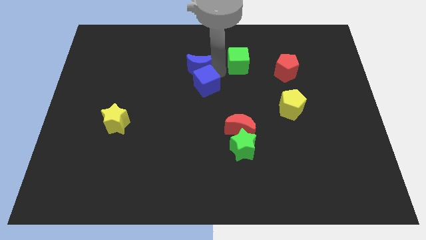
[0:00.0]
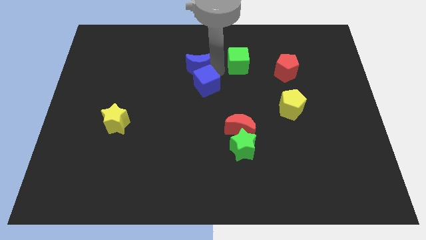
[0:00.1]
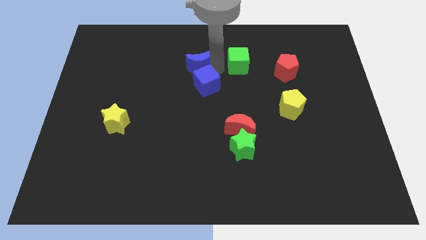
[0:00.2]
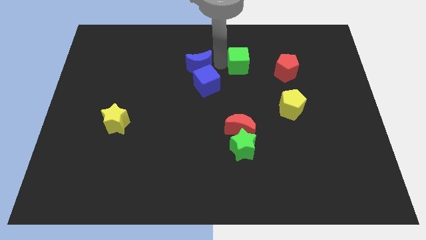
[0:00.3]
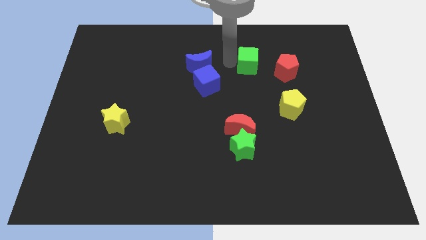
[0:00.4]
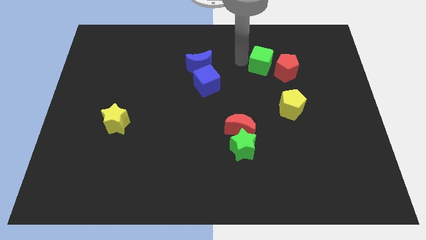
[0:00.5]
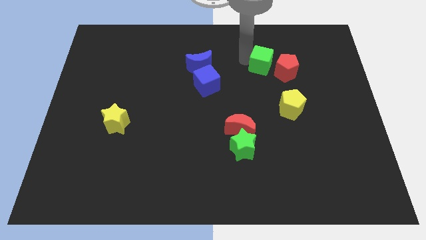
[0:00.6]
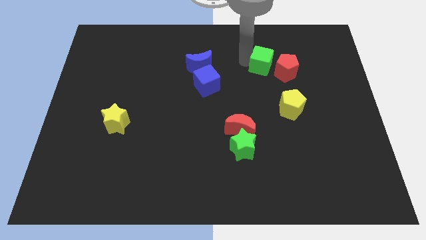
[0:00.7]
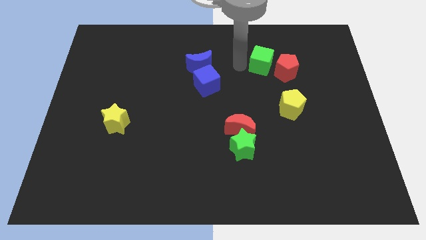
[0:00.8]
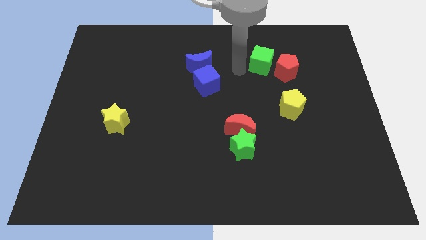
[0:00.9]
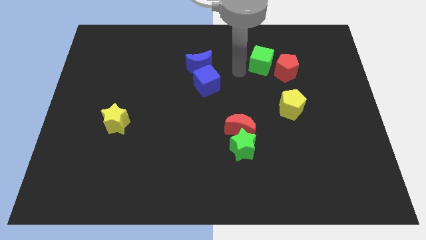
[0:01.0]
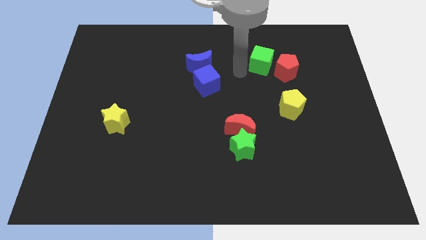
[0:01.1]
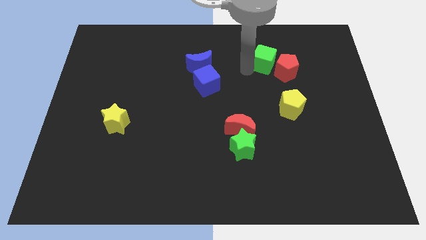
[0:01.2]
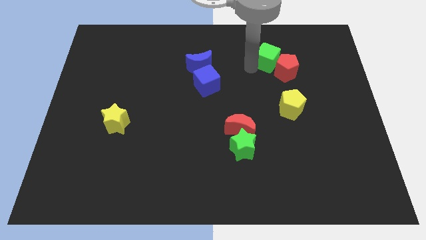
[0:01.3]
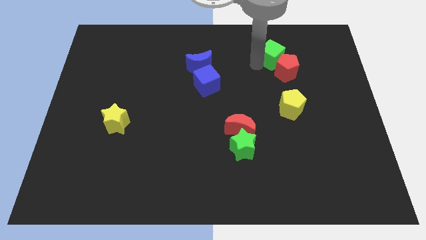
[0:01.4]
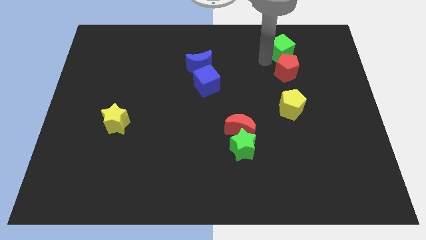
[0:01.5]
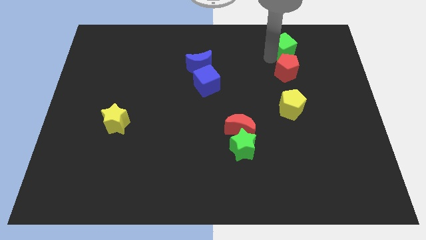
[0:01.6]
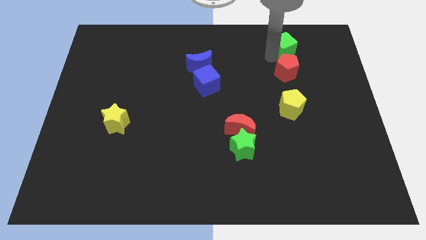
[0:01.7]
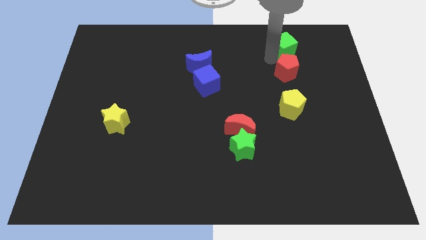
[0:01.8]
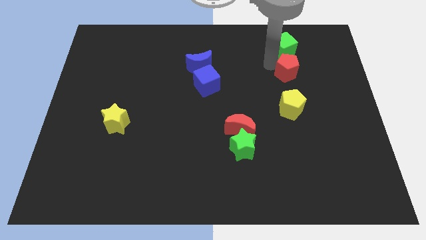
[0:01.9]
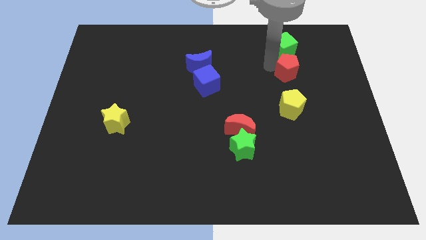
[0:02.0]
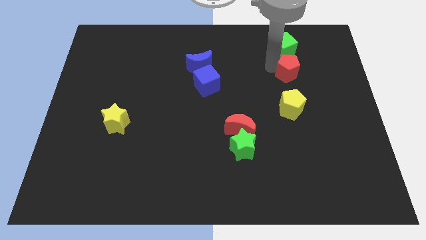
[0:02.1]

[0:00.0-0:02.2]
form a vertical line with green cube red and the yellow pentagon

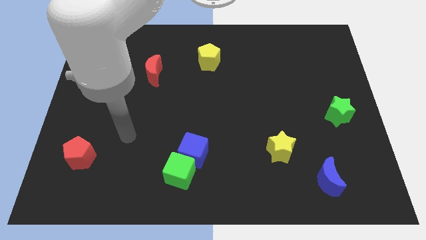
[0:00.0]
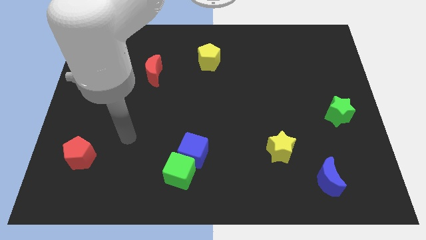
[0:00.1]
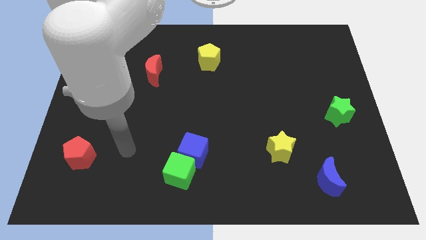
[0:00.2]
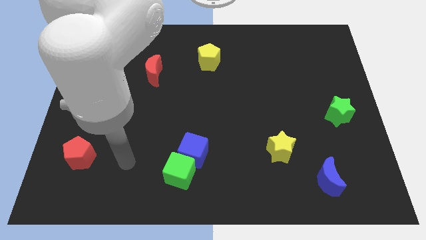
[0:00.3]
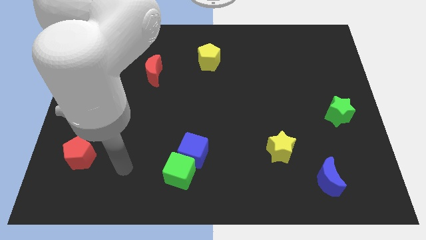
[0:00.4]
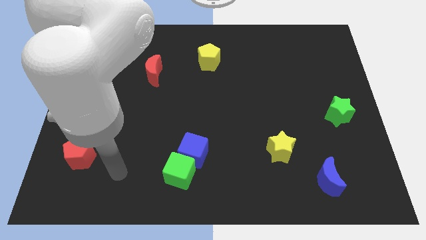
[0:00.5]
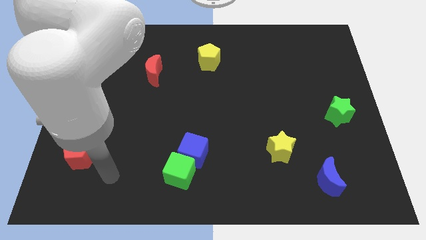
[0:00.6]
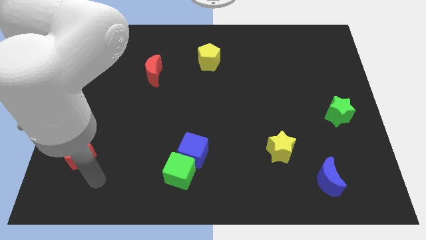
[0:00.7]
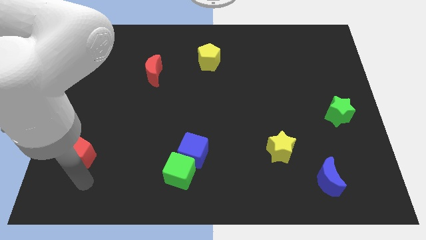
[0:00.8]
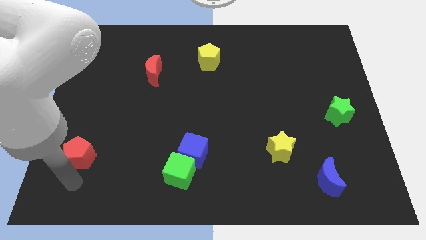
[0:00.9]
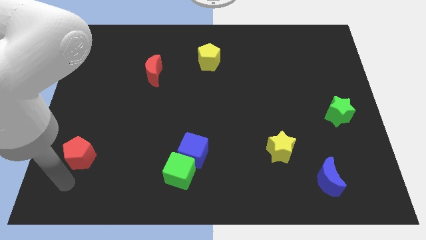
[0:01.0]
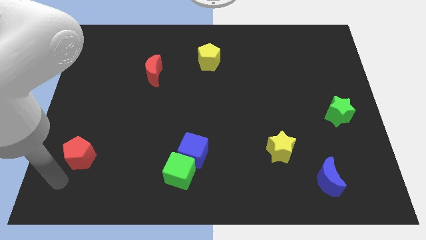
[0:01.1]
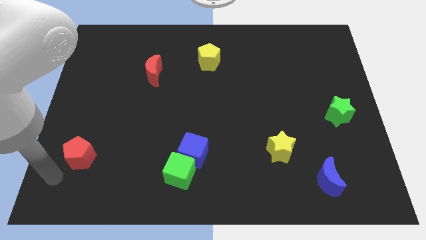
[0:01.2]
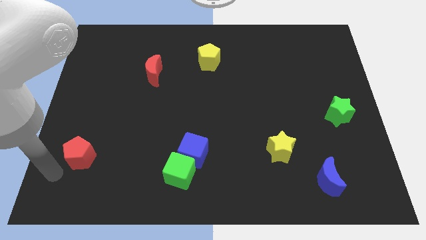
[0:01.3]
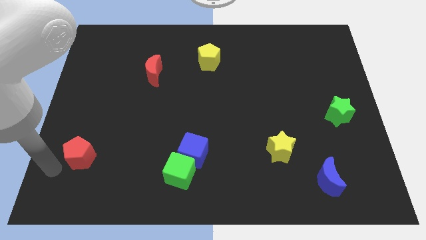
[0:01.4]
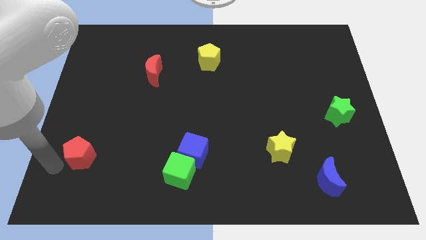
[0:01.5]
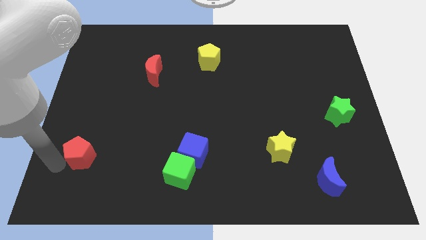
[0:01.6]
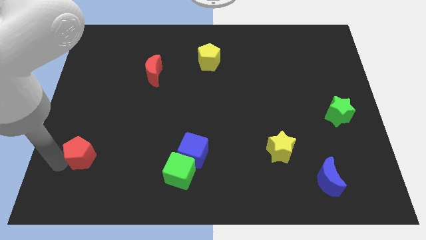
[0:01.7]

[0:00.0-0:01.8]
move your arm into the red pentagon

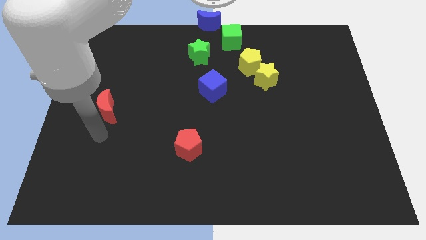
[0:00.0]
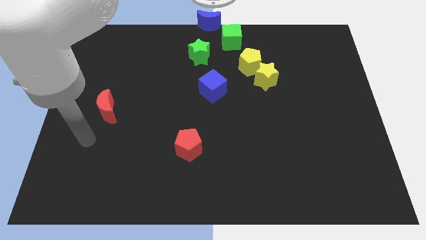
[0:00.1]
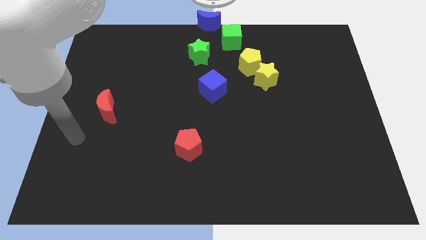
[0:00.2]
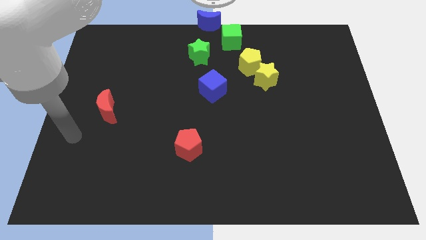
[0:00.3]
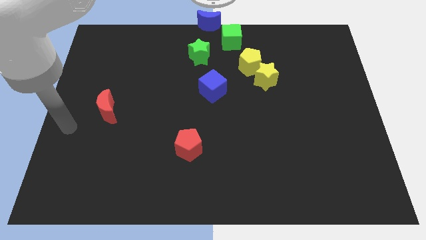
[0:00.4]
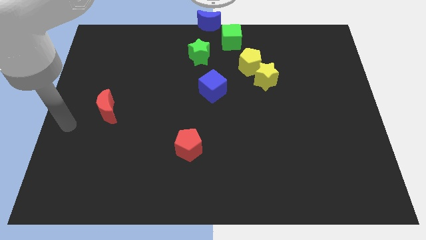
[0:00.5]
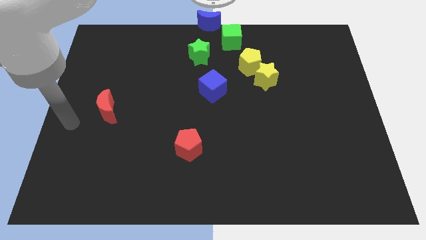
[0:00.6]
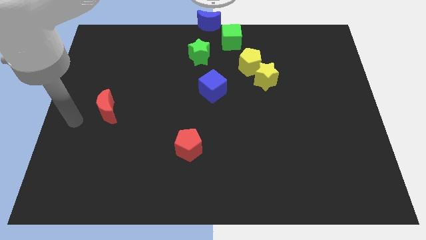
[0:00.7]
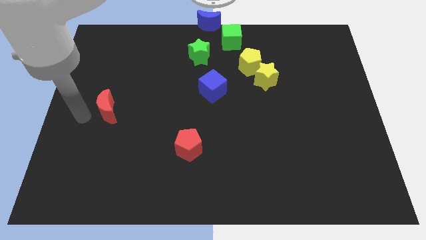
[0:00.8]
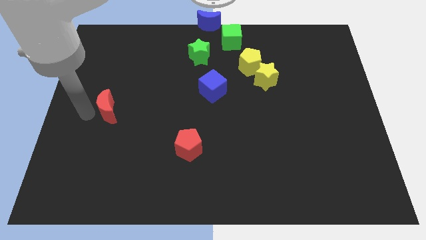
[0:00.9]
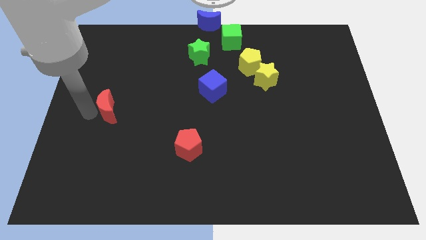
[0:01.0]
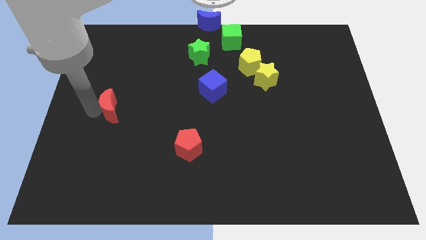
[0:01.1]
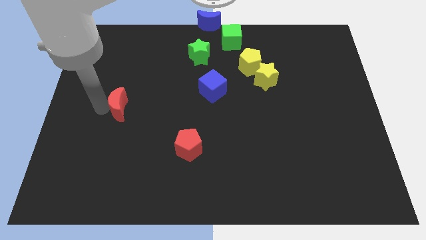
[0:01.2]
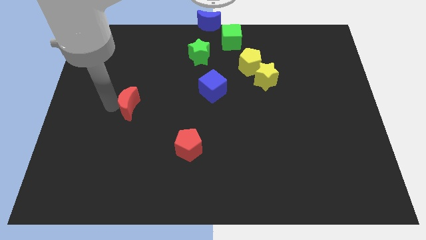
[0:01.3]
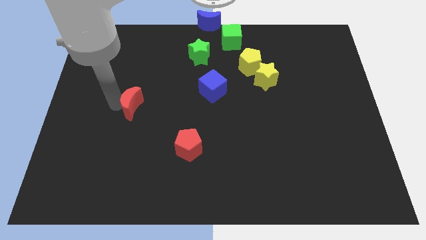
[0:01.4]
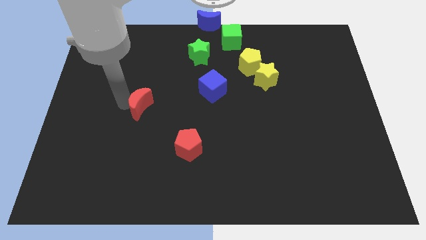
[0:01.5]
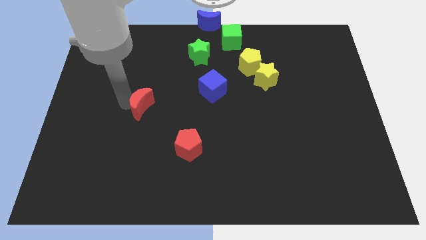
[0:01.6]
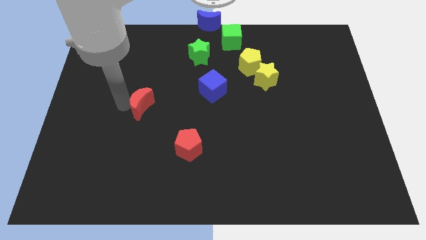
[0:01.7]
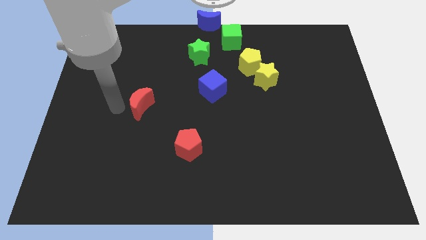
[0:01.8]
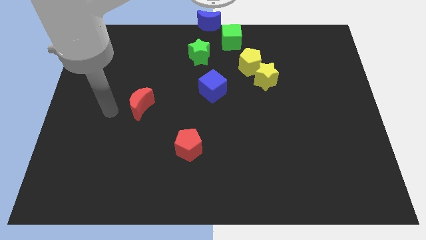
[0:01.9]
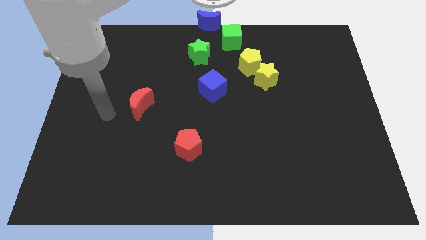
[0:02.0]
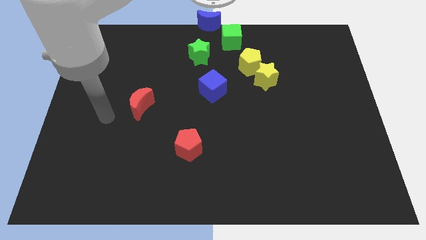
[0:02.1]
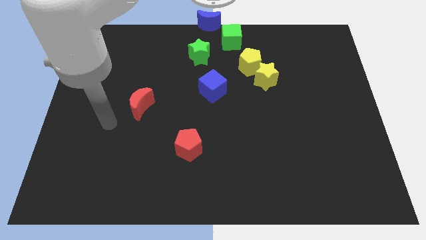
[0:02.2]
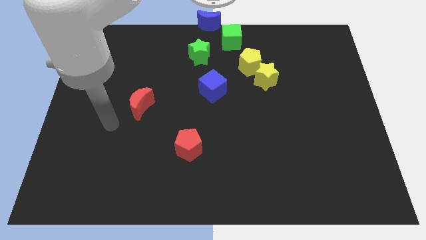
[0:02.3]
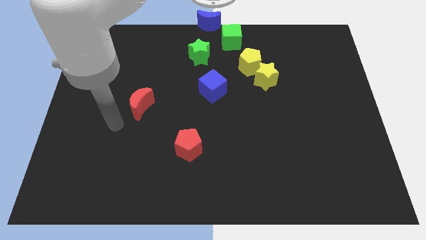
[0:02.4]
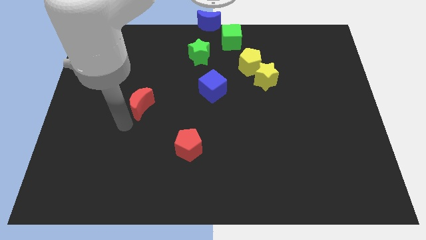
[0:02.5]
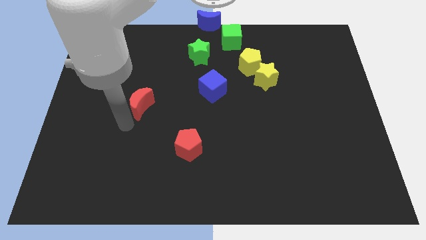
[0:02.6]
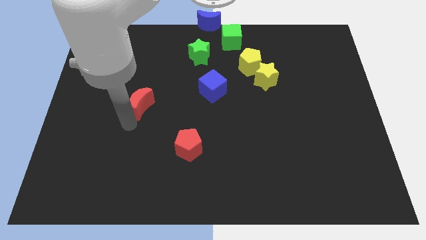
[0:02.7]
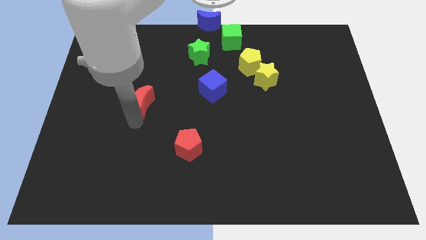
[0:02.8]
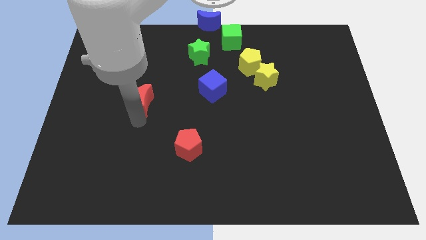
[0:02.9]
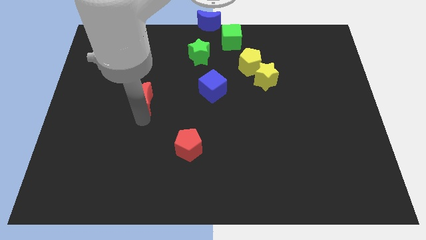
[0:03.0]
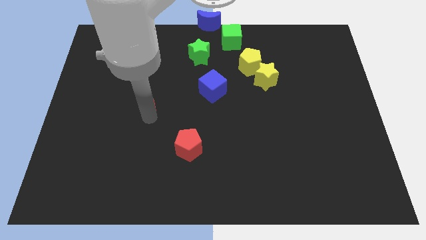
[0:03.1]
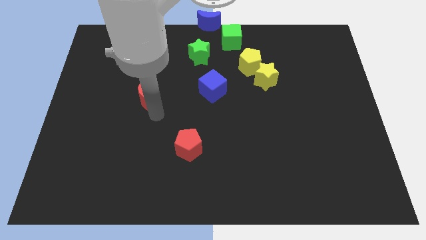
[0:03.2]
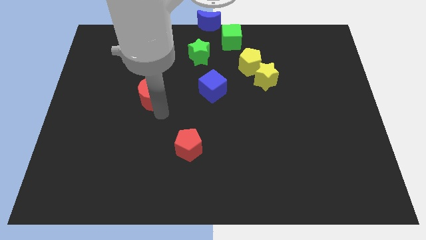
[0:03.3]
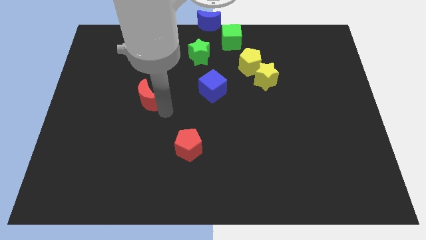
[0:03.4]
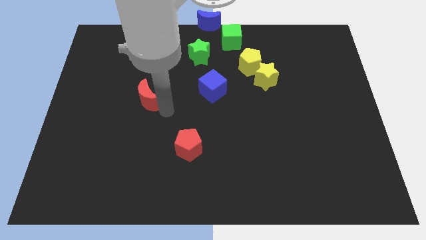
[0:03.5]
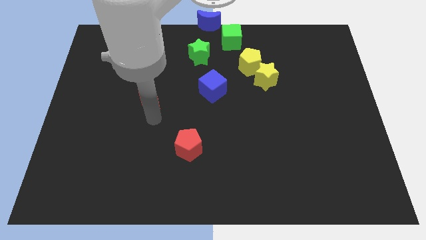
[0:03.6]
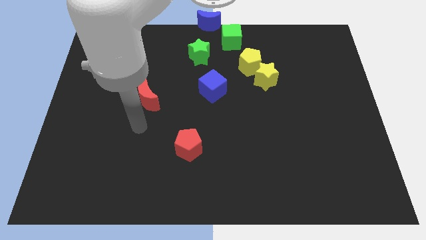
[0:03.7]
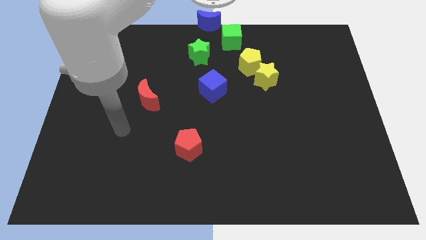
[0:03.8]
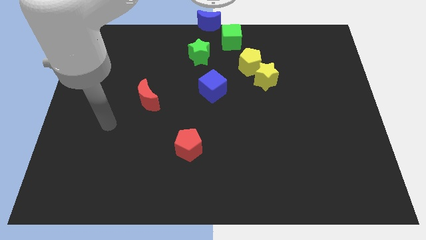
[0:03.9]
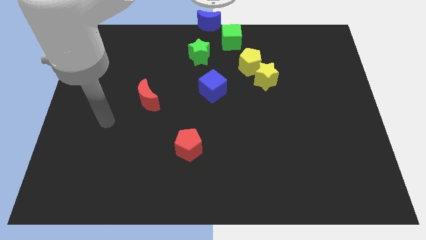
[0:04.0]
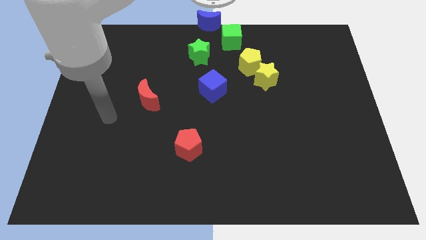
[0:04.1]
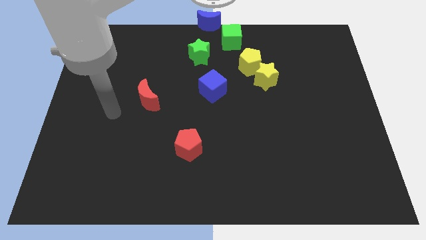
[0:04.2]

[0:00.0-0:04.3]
move the red moon to the left of the blue cube

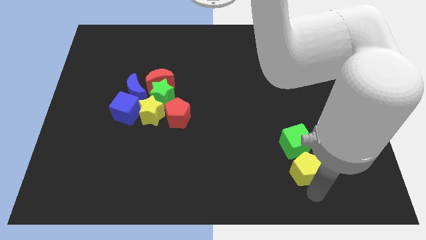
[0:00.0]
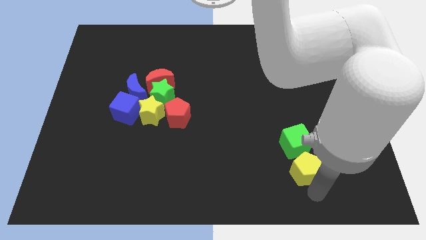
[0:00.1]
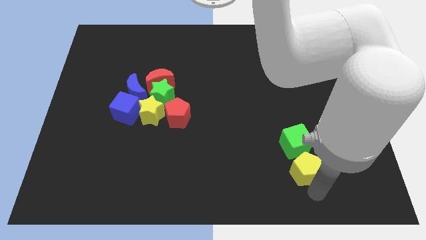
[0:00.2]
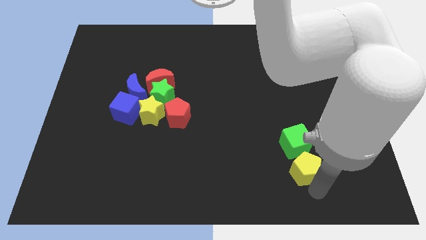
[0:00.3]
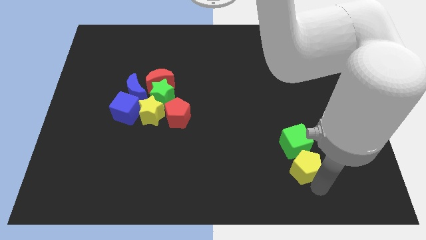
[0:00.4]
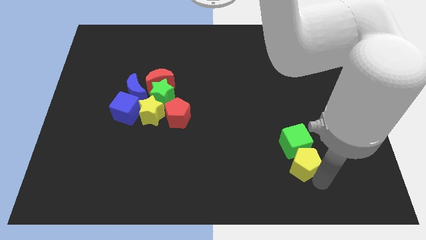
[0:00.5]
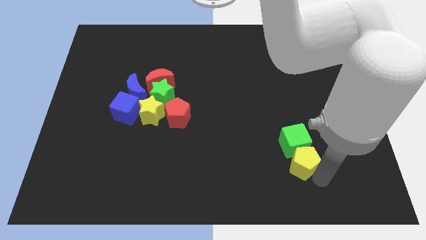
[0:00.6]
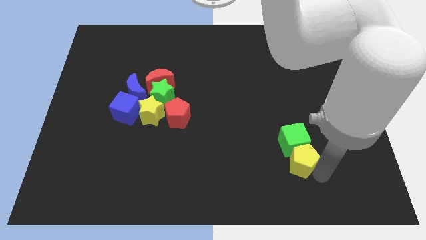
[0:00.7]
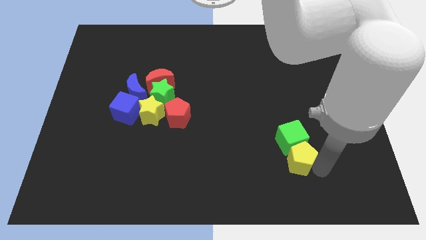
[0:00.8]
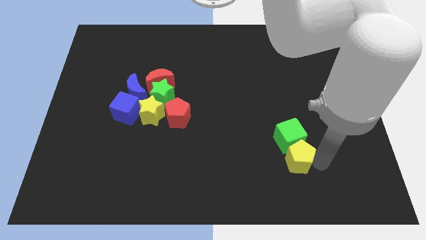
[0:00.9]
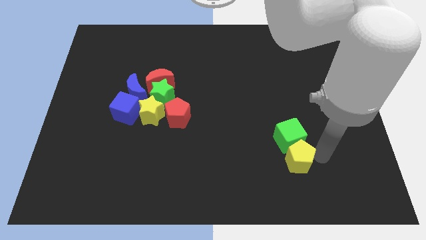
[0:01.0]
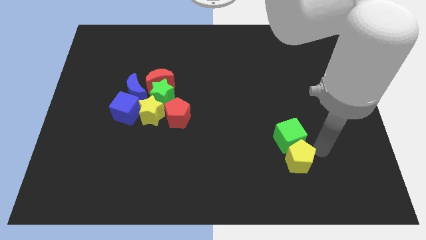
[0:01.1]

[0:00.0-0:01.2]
push the yellow pentagon into the green cube
